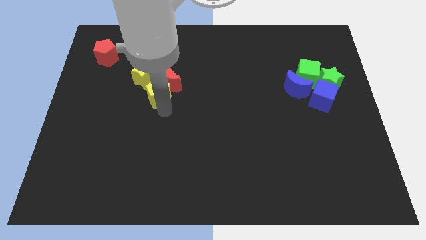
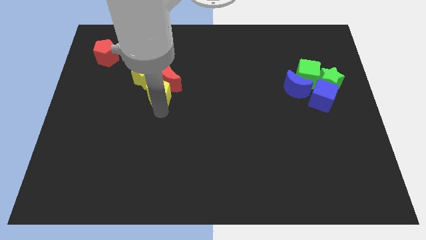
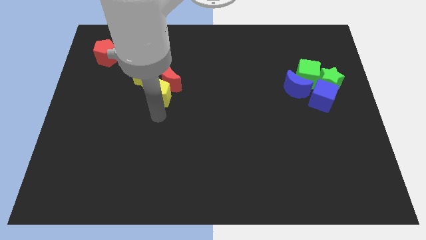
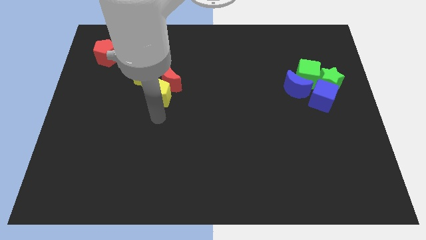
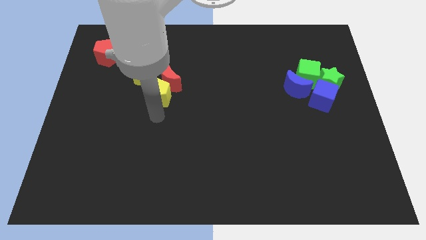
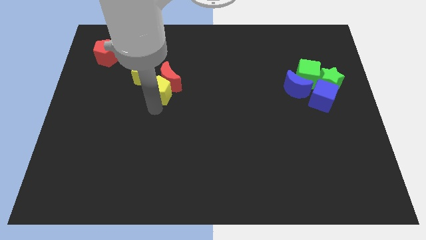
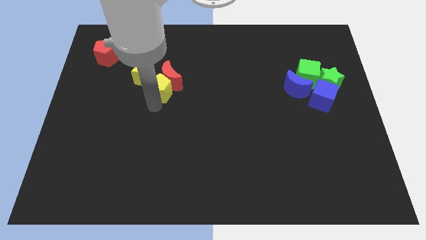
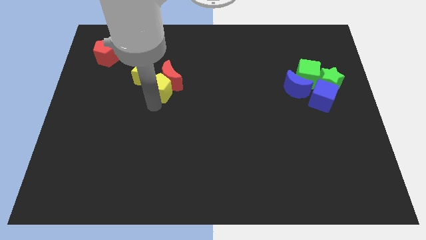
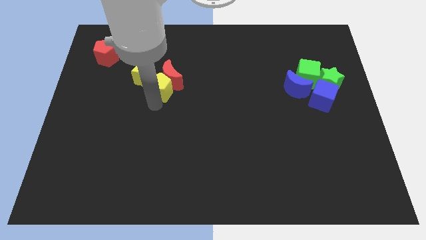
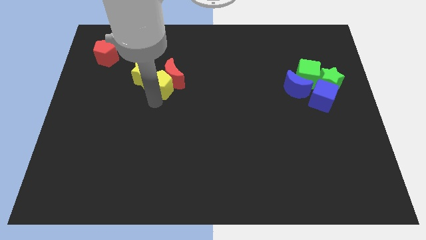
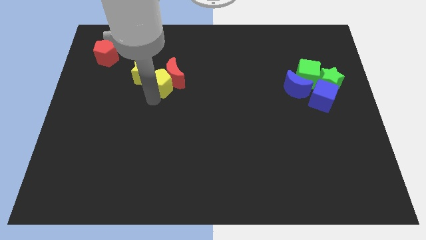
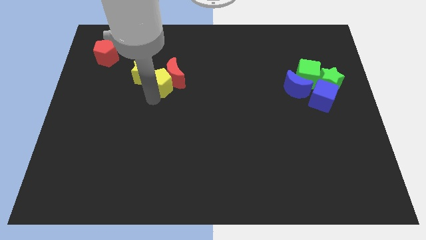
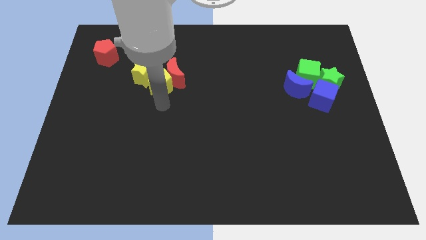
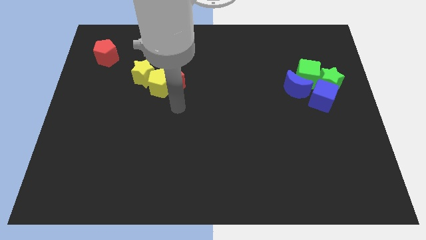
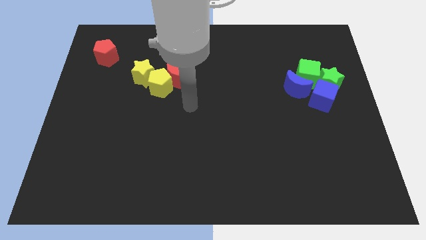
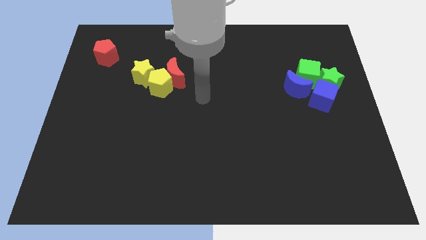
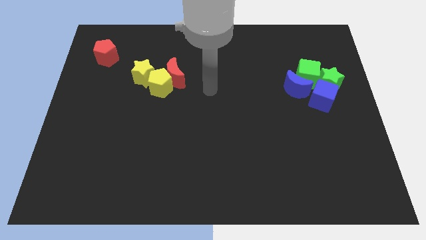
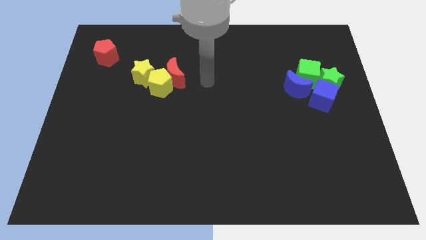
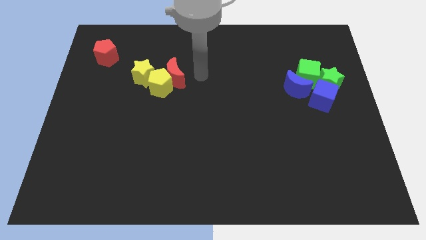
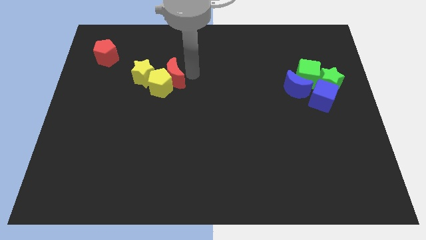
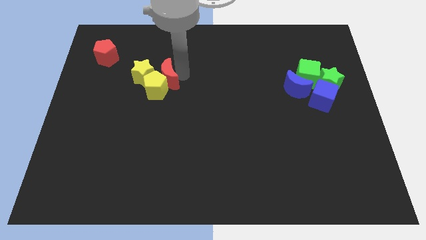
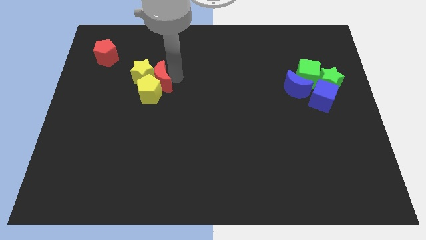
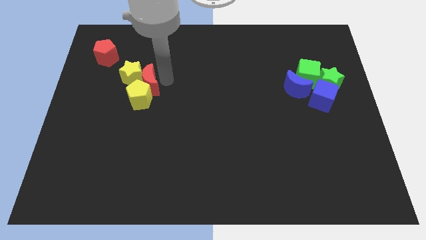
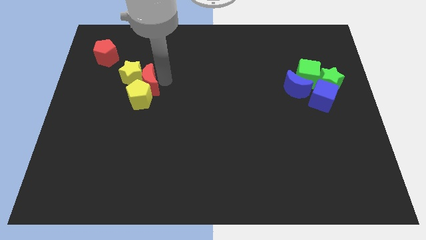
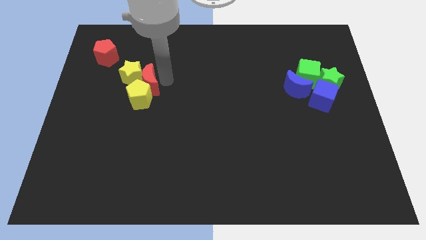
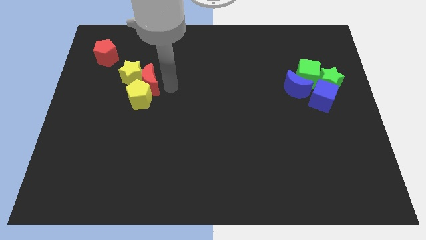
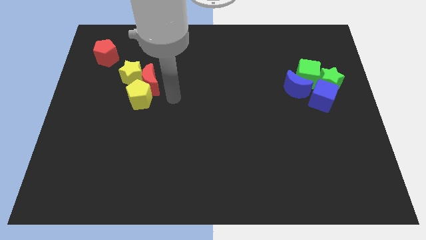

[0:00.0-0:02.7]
push the yellow pentagon into the red crescent and yellow star

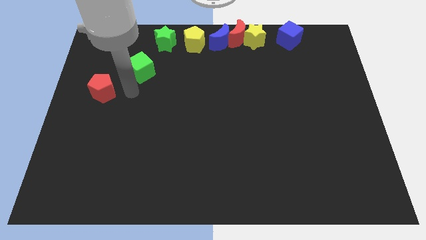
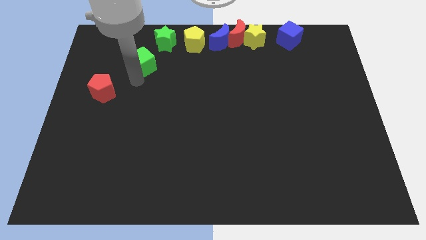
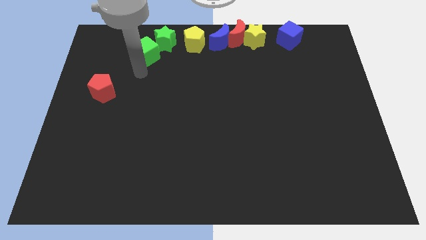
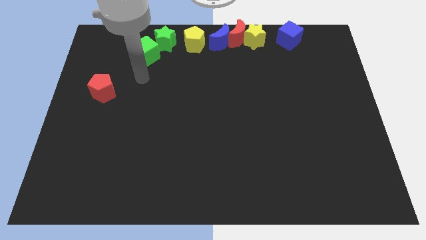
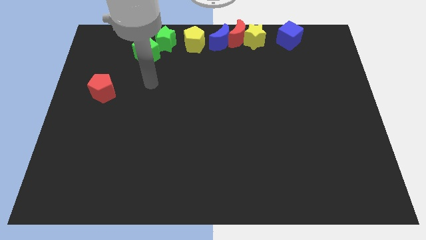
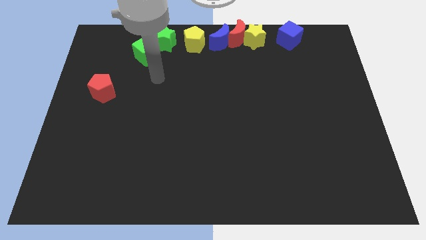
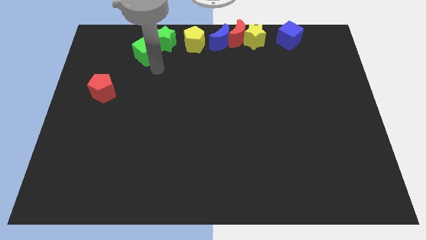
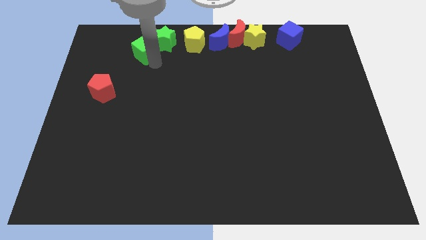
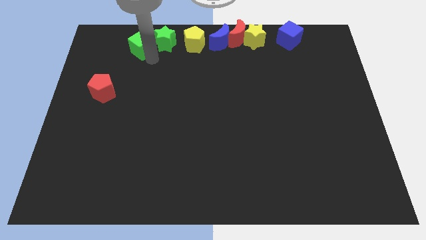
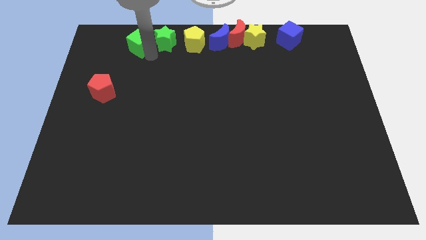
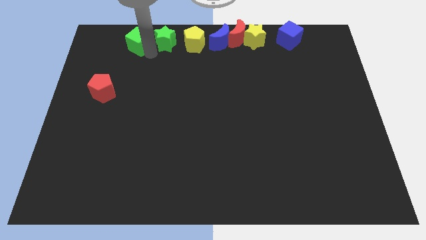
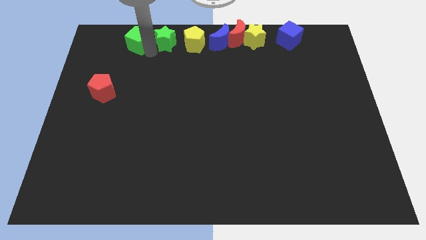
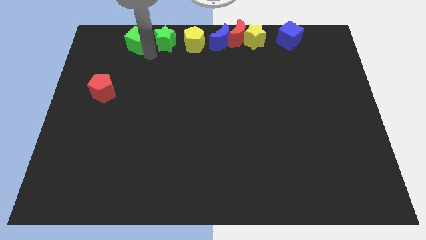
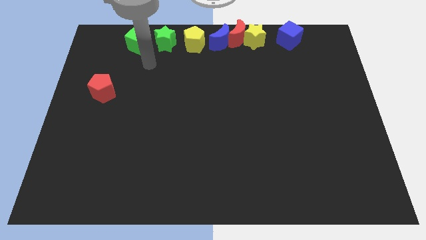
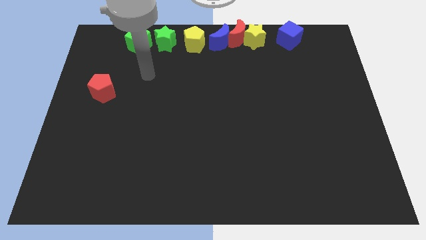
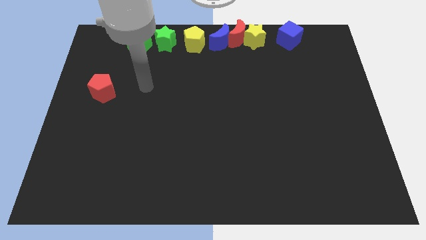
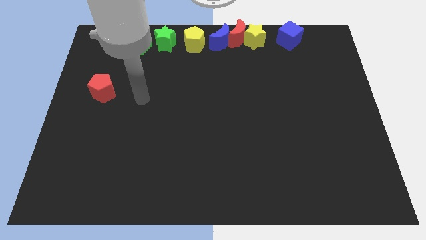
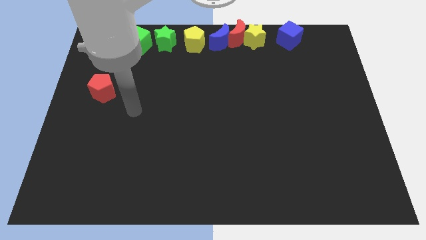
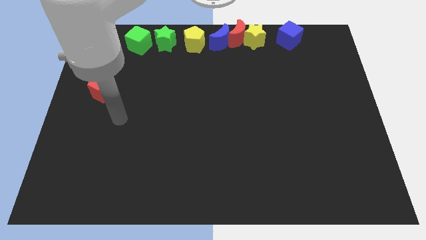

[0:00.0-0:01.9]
move the green cube towards the green star

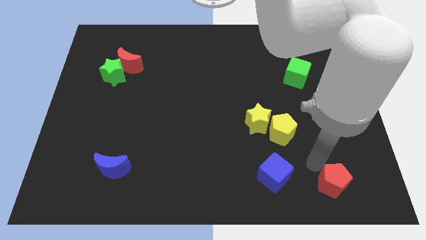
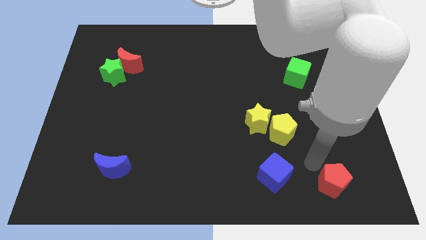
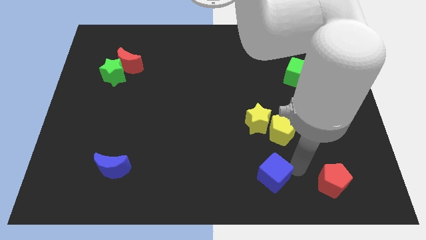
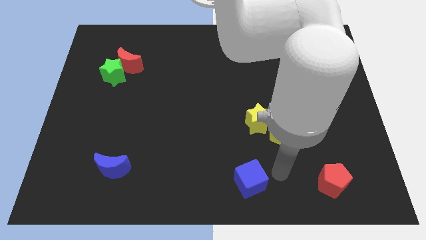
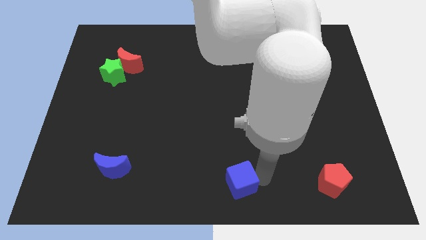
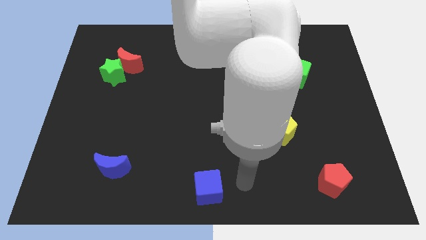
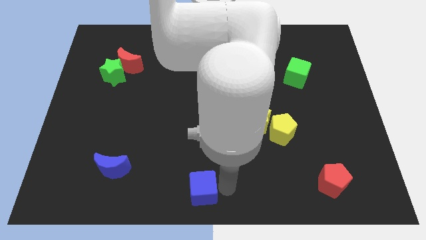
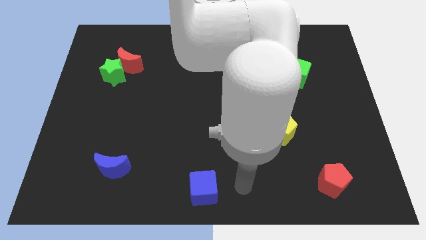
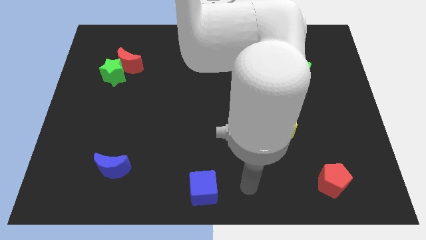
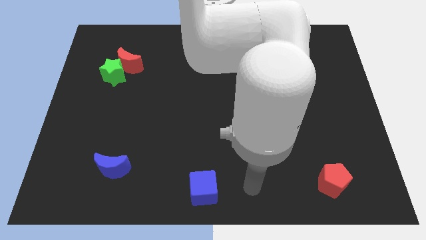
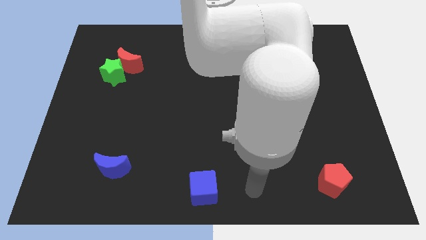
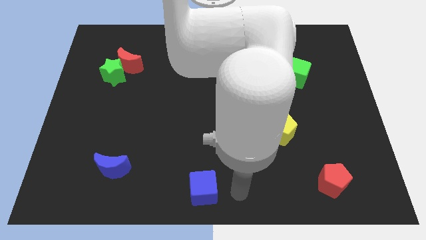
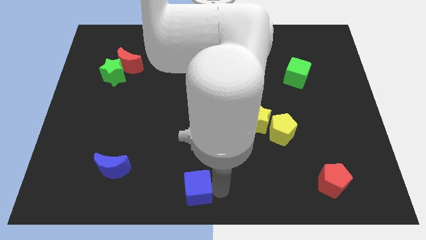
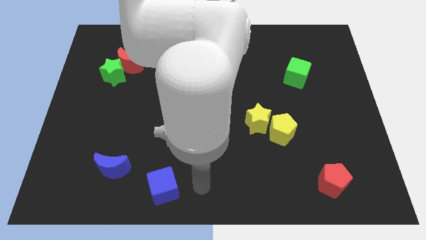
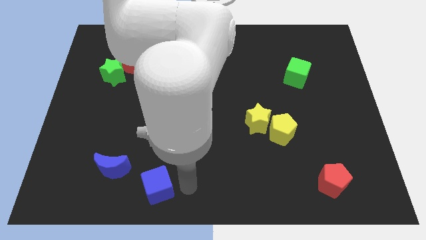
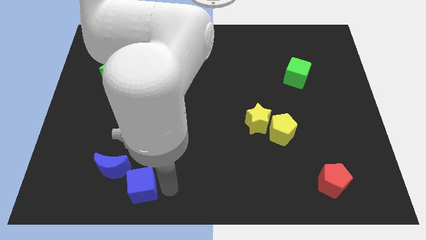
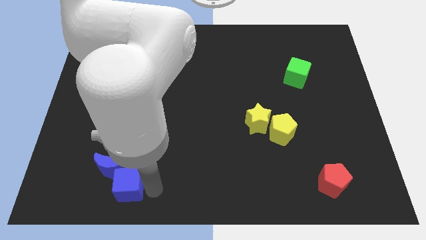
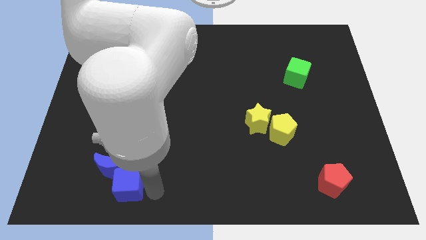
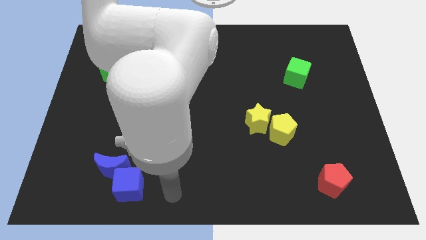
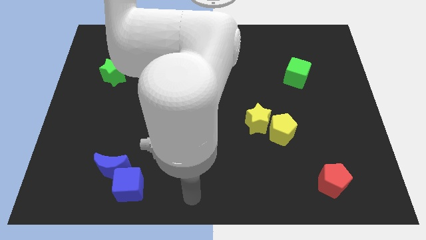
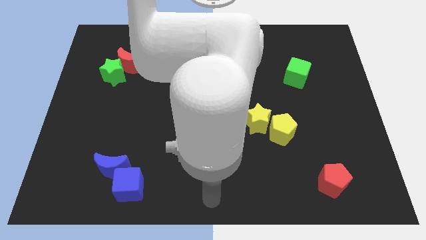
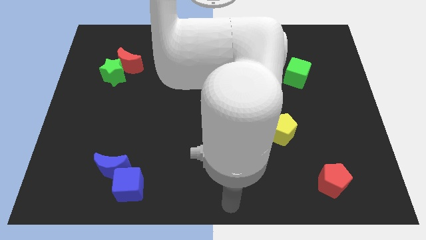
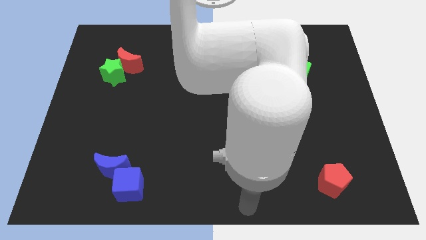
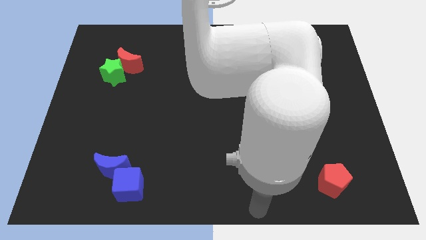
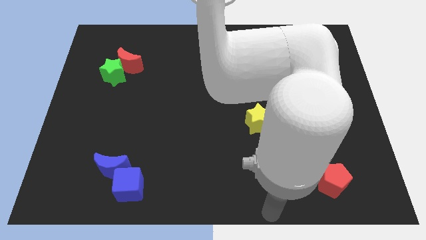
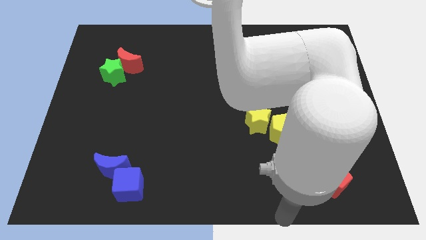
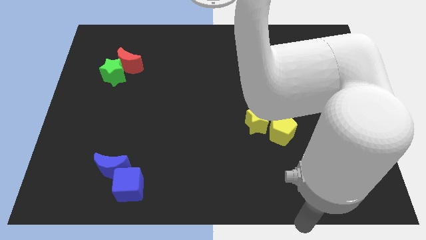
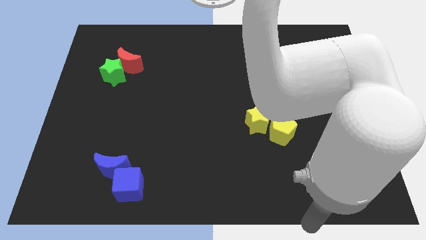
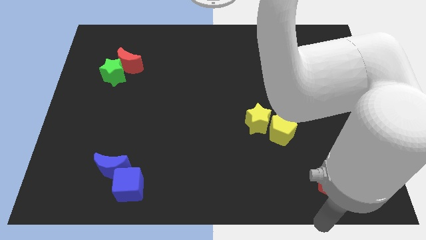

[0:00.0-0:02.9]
move the blue cube right below the blue moon

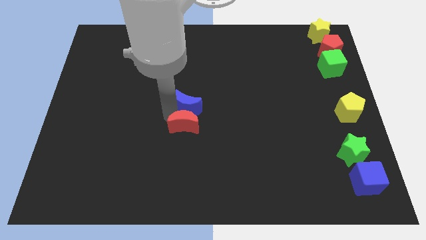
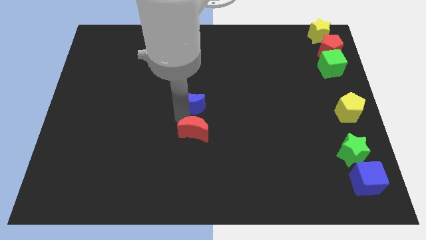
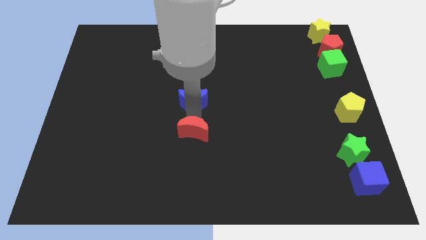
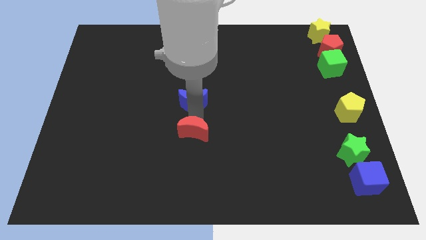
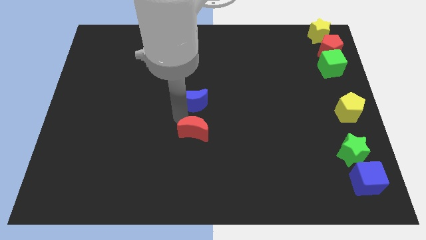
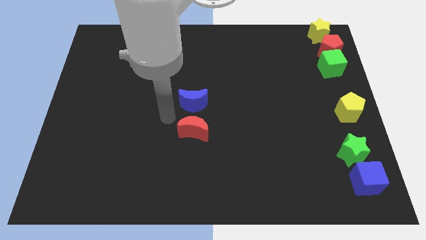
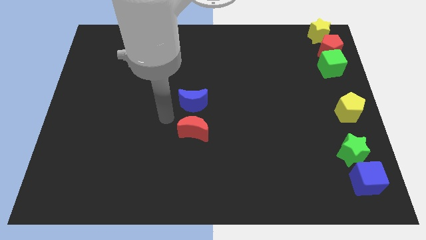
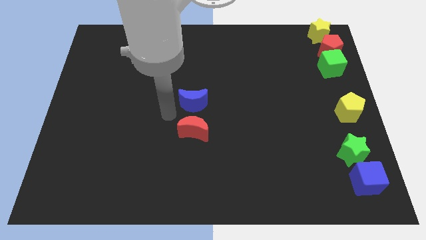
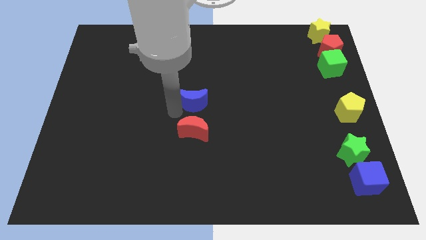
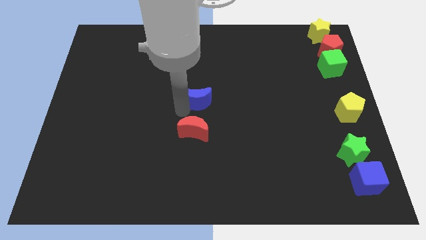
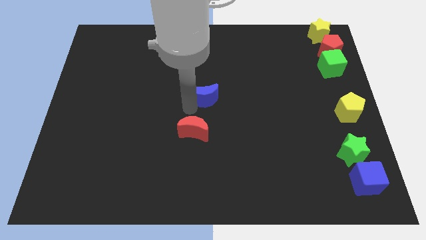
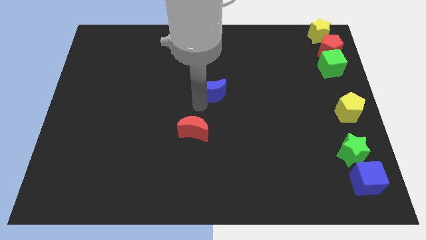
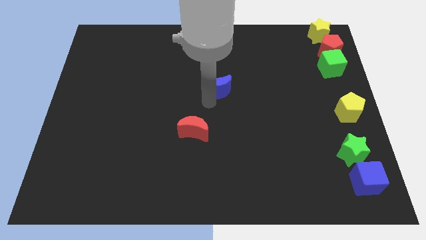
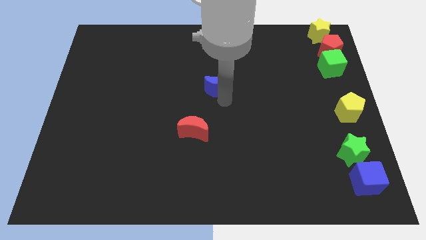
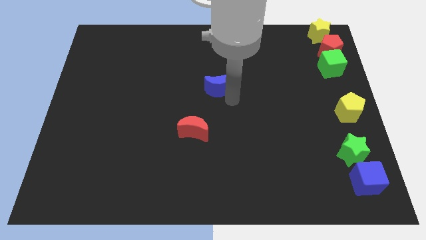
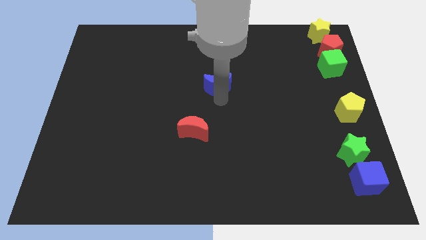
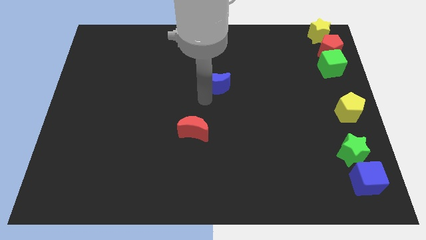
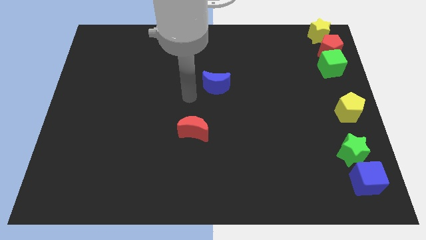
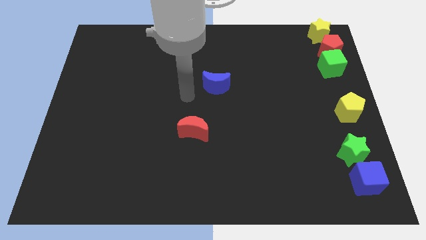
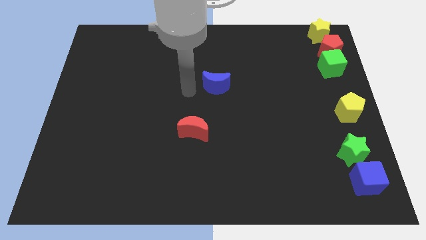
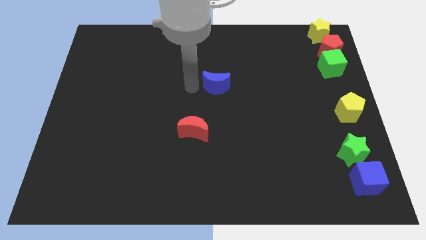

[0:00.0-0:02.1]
separate blue moon from the red moon
